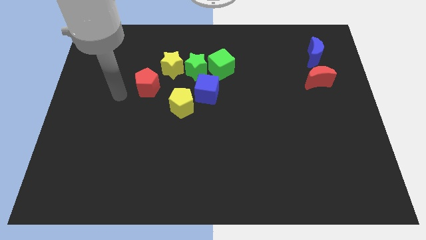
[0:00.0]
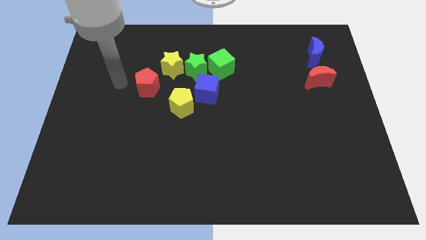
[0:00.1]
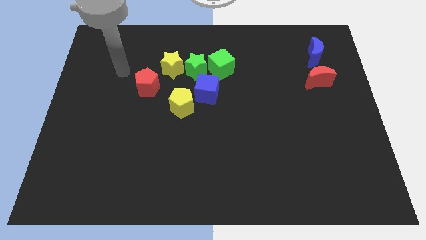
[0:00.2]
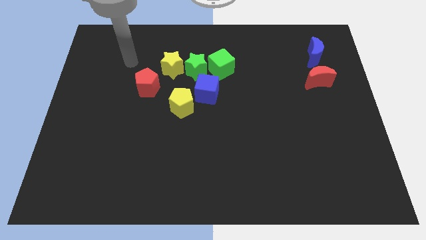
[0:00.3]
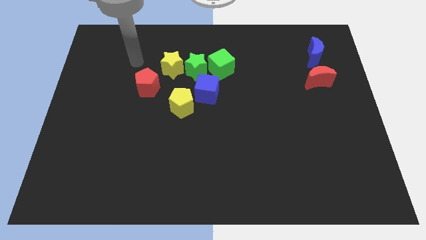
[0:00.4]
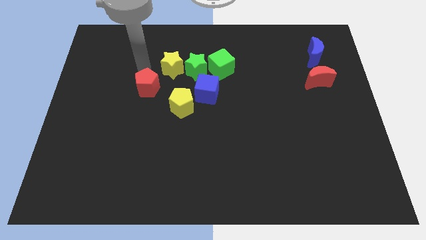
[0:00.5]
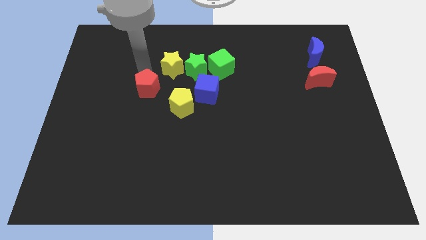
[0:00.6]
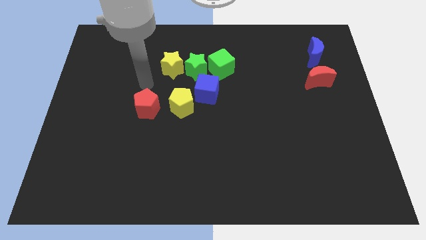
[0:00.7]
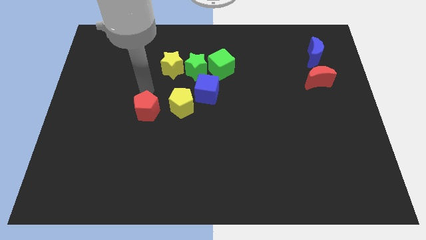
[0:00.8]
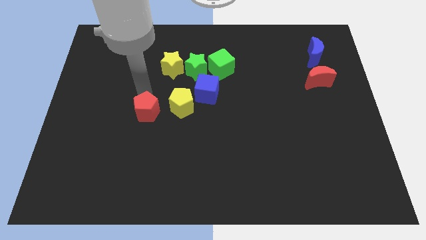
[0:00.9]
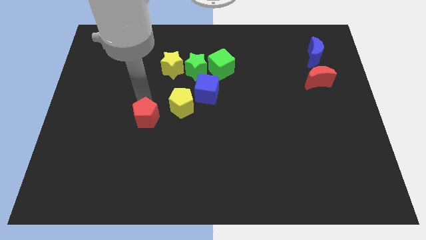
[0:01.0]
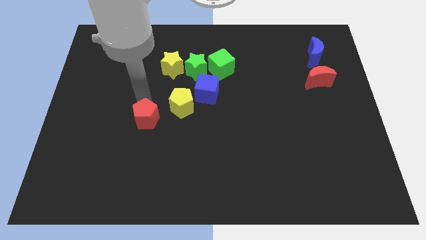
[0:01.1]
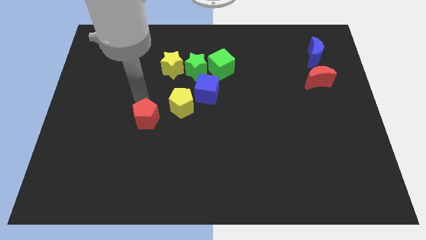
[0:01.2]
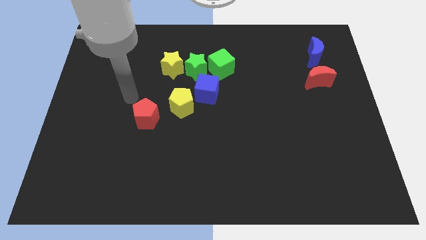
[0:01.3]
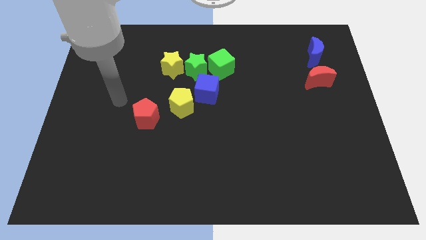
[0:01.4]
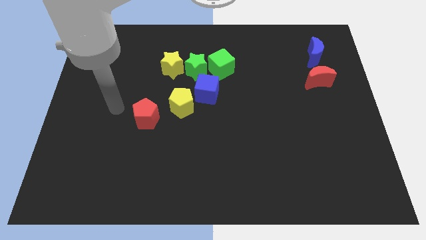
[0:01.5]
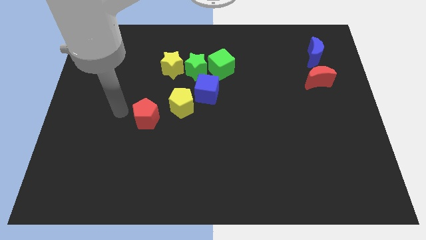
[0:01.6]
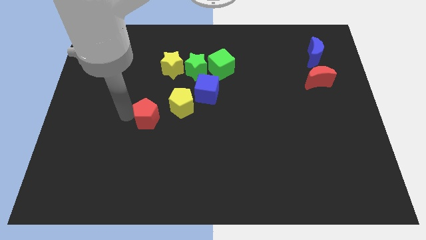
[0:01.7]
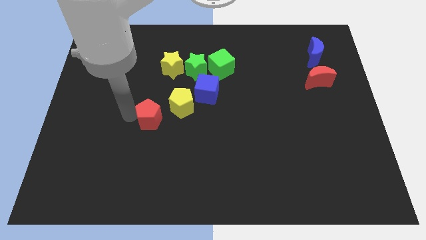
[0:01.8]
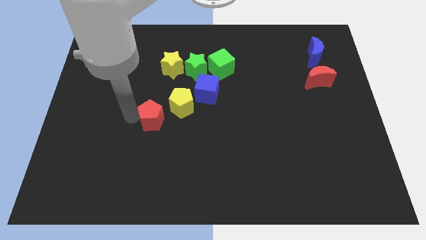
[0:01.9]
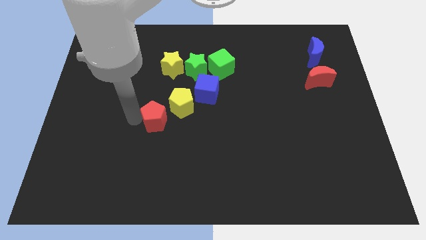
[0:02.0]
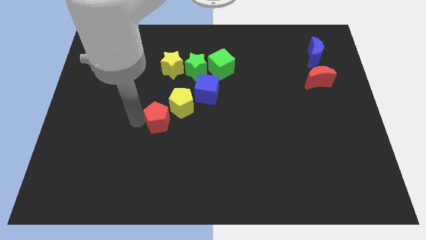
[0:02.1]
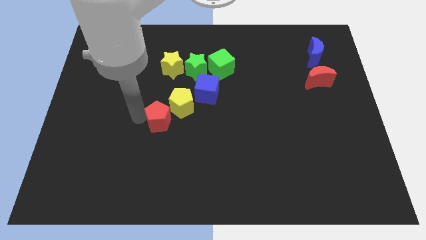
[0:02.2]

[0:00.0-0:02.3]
push the red pentagon close to the yellow pentagon

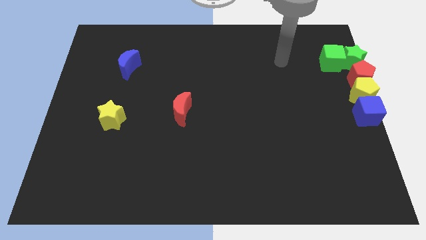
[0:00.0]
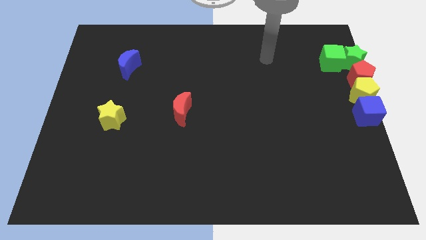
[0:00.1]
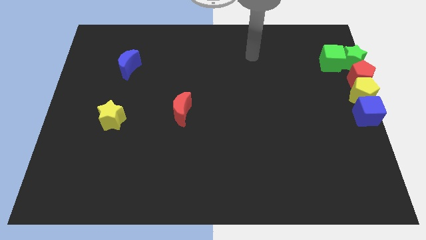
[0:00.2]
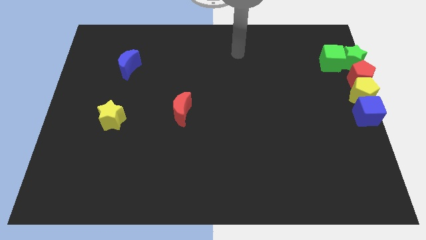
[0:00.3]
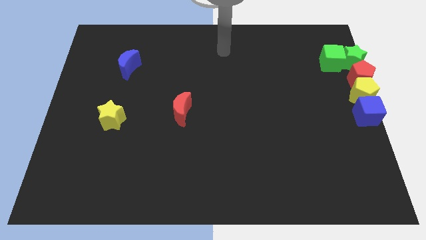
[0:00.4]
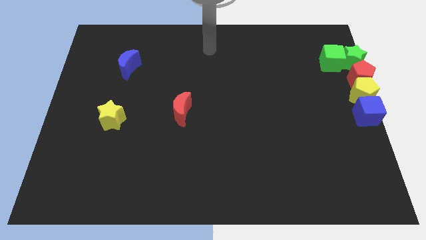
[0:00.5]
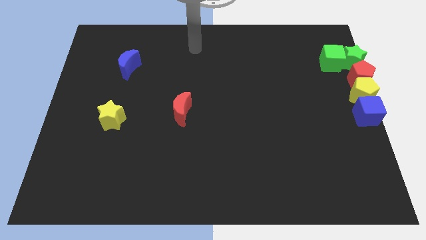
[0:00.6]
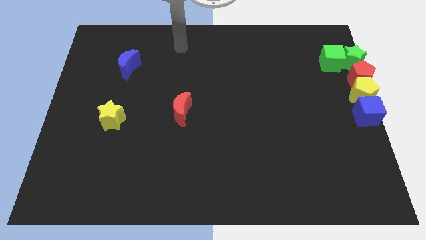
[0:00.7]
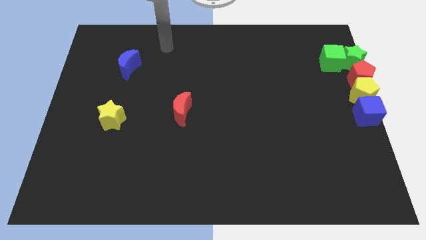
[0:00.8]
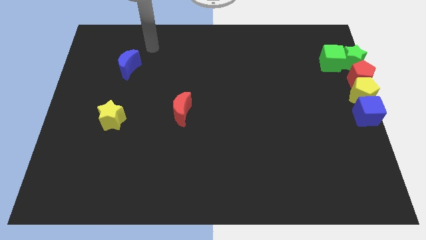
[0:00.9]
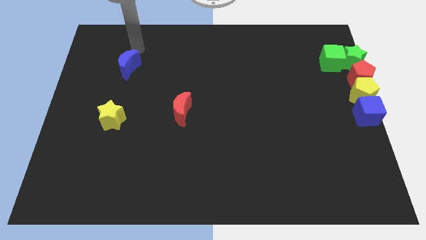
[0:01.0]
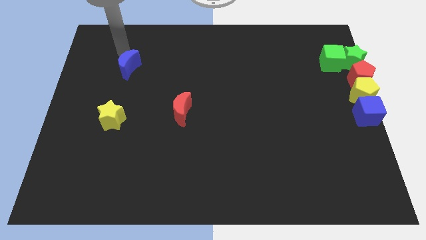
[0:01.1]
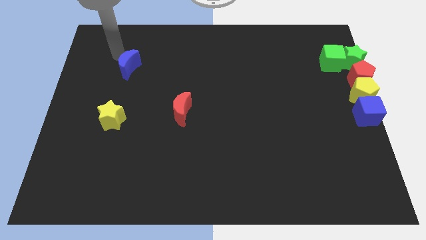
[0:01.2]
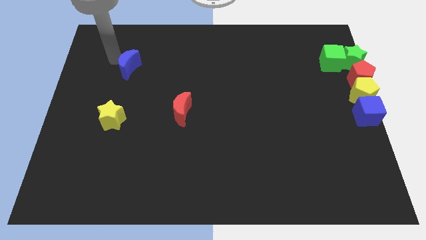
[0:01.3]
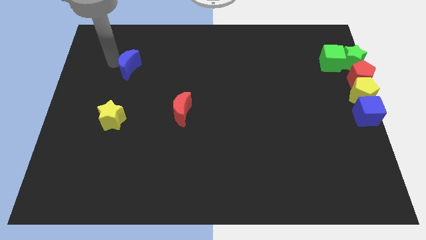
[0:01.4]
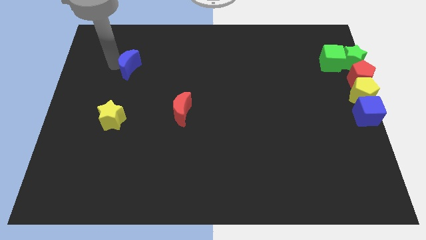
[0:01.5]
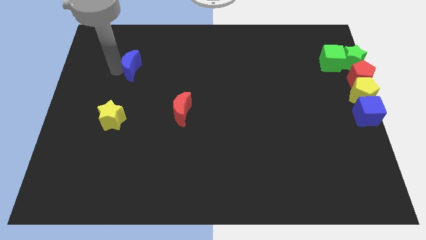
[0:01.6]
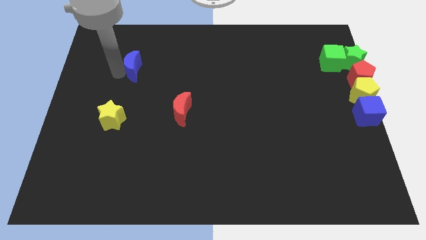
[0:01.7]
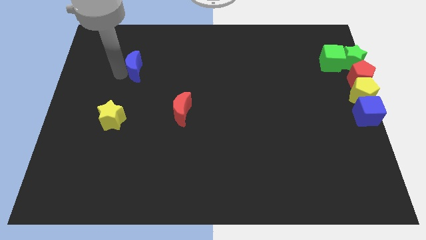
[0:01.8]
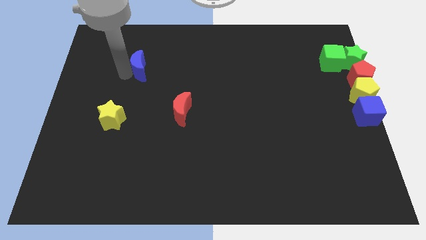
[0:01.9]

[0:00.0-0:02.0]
slightly move the blue crescent towards the right of the board

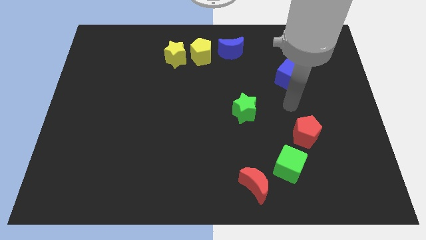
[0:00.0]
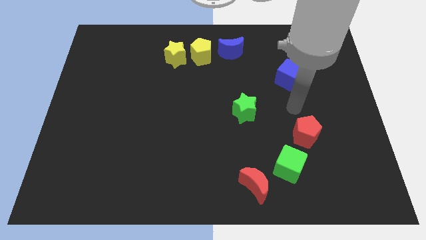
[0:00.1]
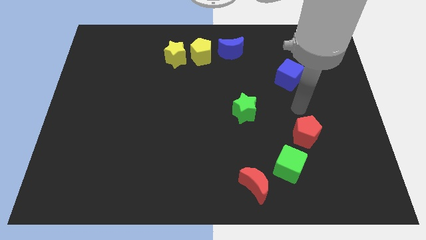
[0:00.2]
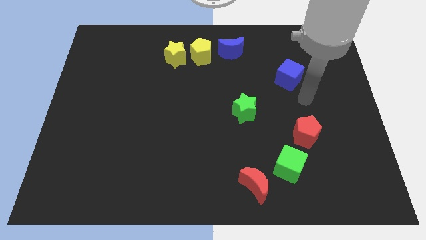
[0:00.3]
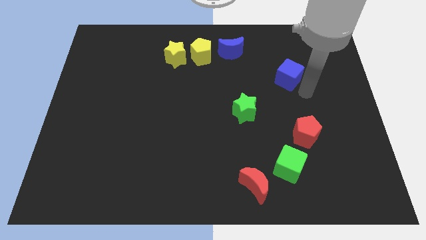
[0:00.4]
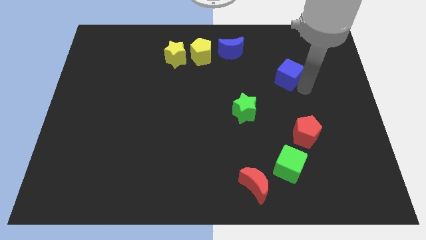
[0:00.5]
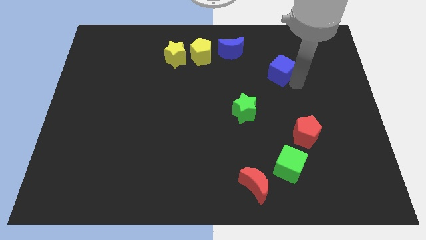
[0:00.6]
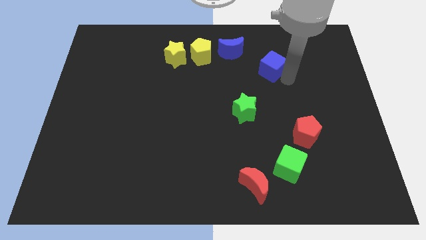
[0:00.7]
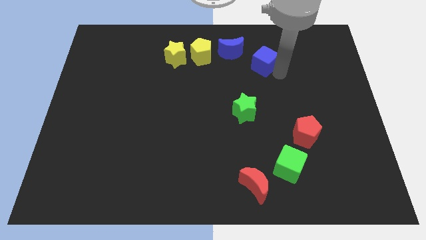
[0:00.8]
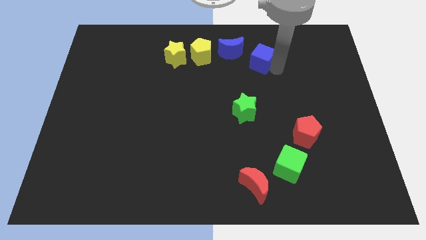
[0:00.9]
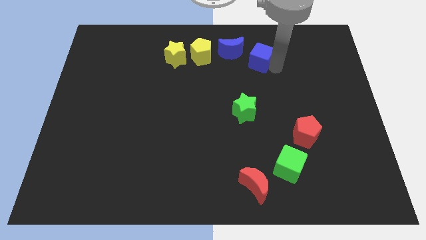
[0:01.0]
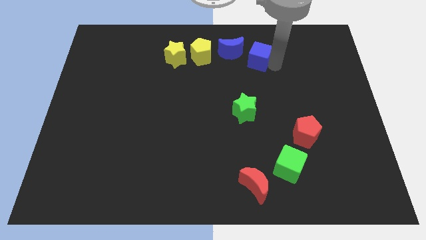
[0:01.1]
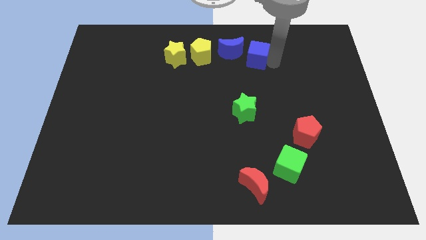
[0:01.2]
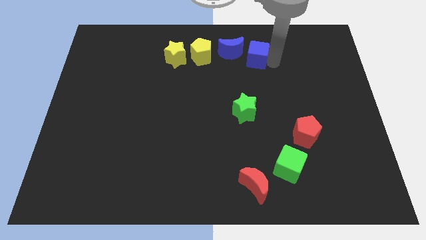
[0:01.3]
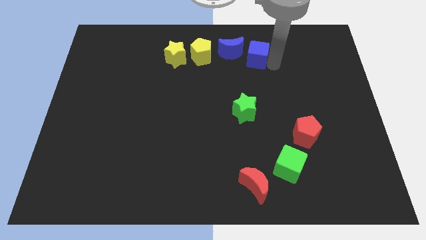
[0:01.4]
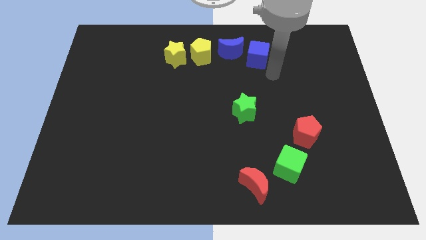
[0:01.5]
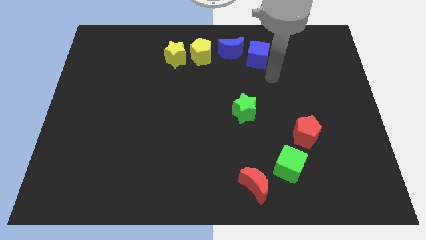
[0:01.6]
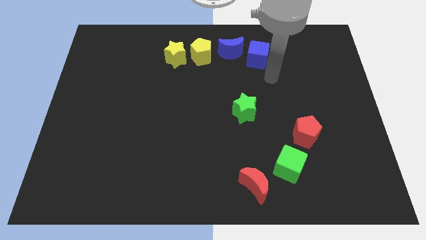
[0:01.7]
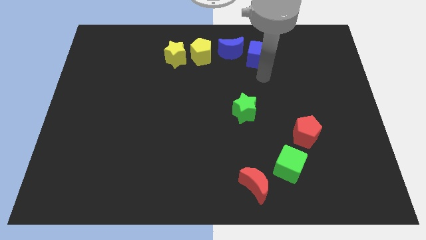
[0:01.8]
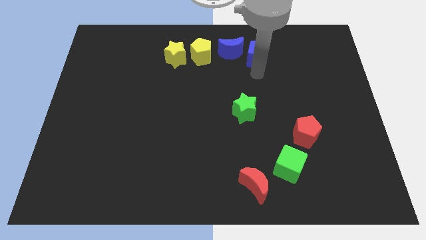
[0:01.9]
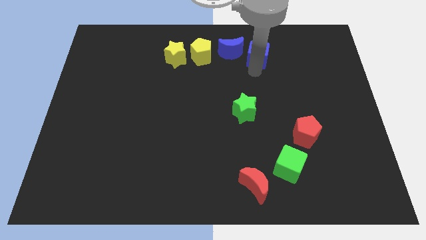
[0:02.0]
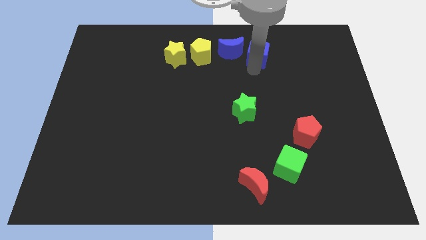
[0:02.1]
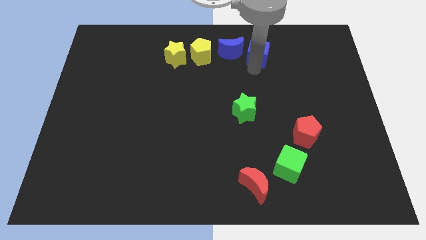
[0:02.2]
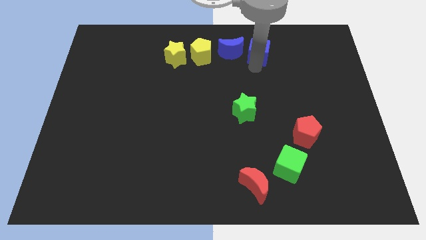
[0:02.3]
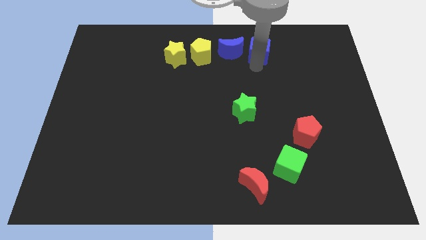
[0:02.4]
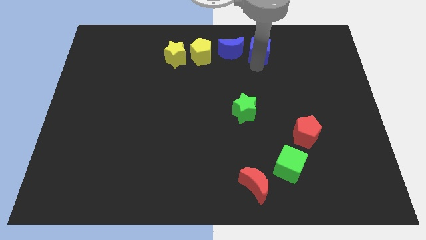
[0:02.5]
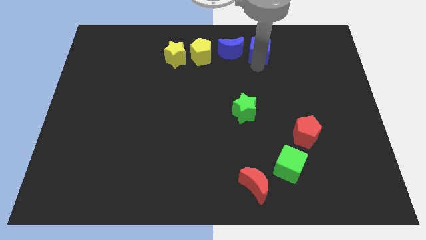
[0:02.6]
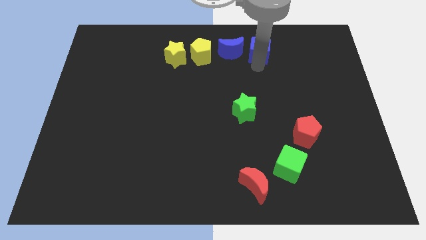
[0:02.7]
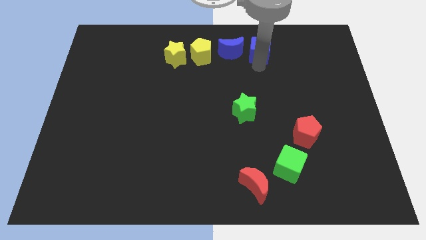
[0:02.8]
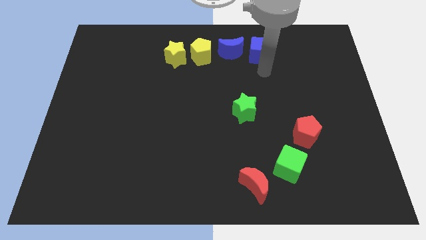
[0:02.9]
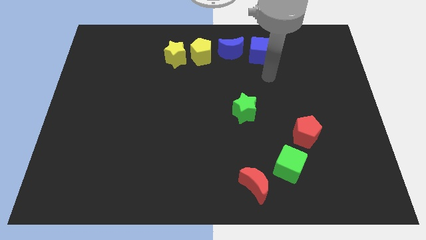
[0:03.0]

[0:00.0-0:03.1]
move the blue cube towards top

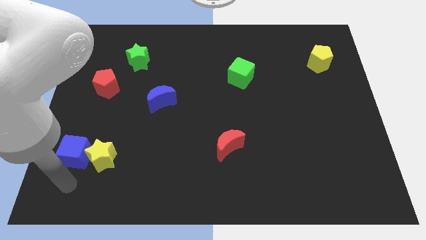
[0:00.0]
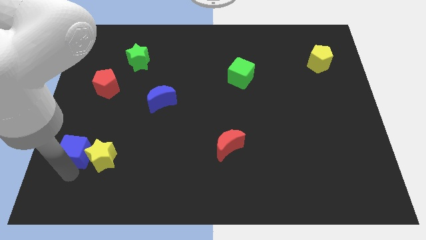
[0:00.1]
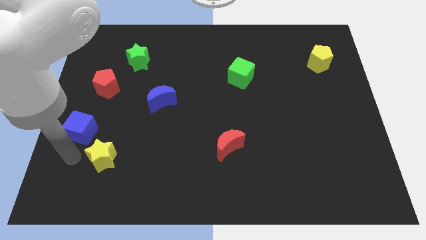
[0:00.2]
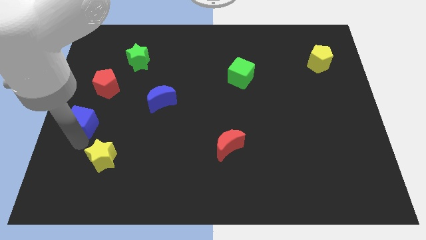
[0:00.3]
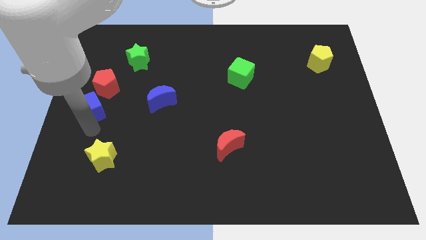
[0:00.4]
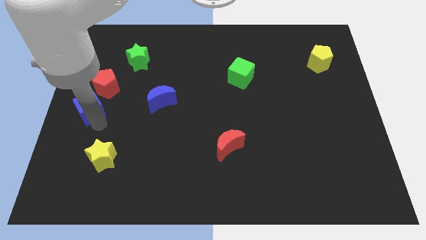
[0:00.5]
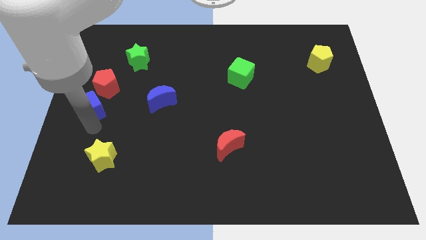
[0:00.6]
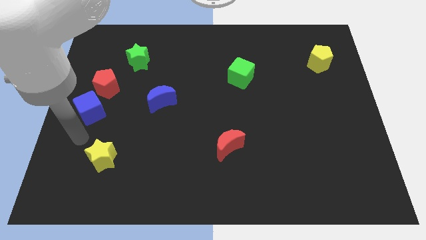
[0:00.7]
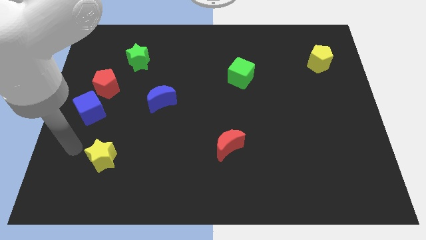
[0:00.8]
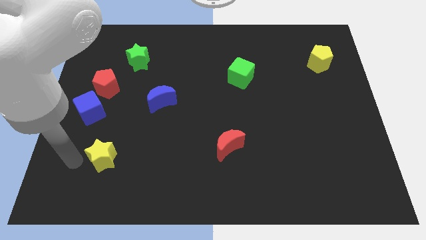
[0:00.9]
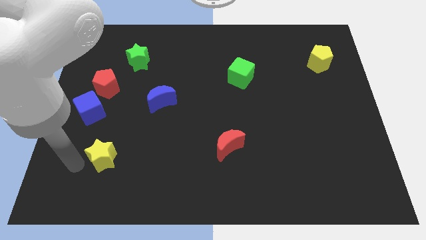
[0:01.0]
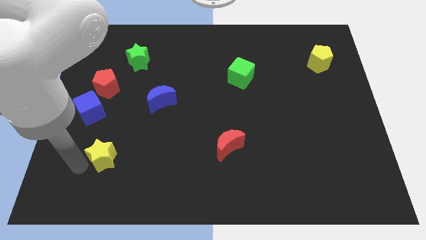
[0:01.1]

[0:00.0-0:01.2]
move blue cube towards red pentagon

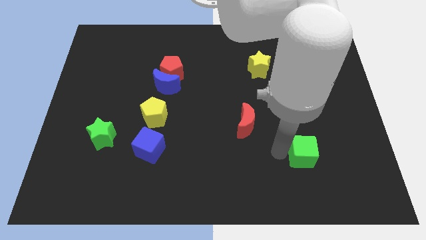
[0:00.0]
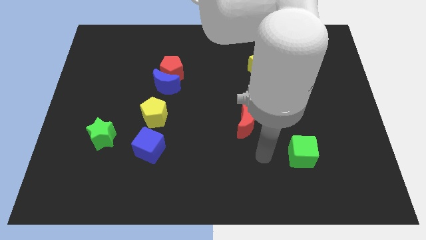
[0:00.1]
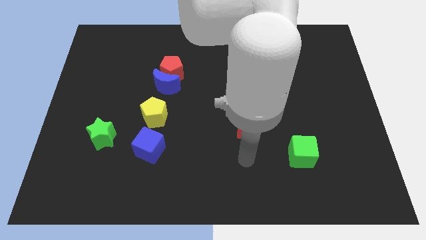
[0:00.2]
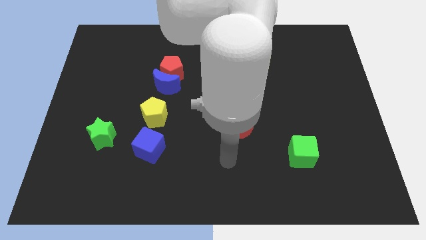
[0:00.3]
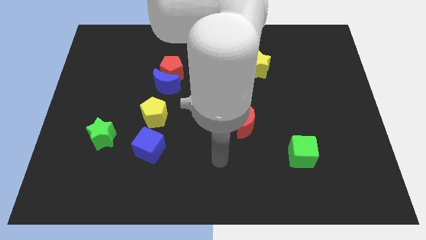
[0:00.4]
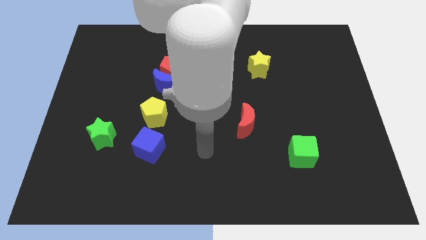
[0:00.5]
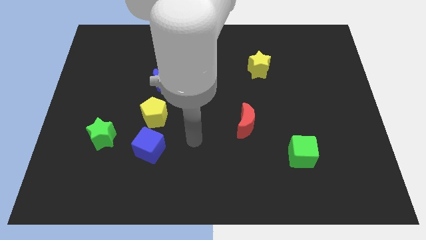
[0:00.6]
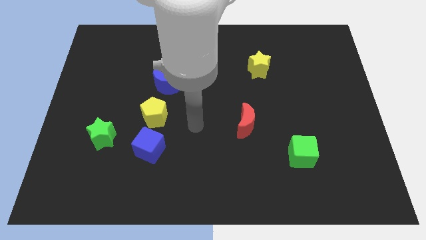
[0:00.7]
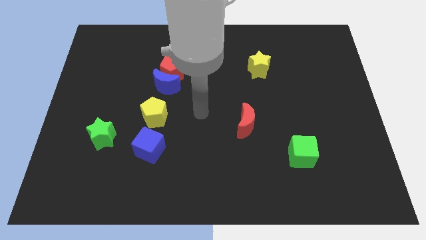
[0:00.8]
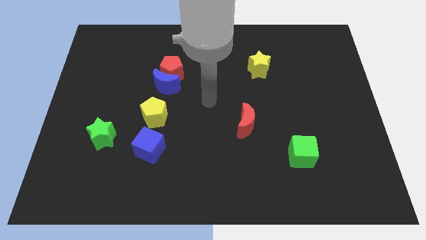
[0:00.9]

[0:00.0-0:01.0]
move your hand away from the green cube
